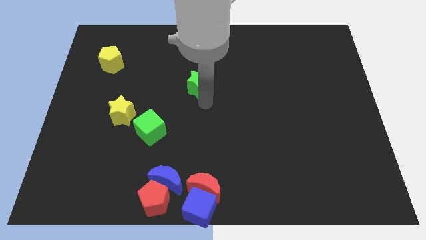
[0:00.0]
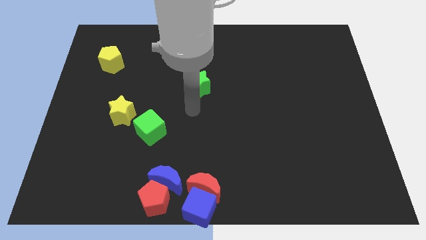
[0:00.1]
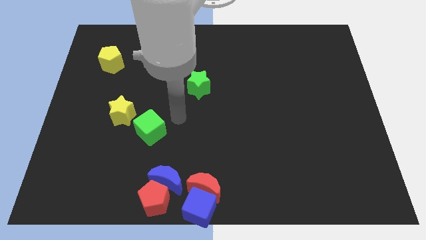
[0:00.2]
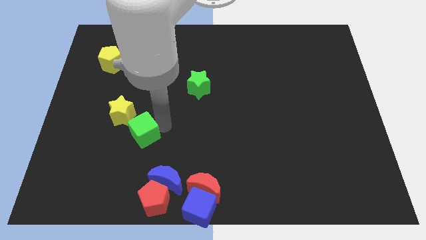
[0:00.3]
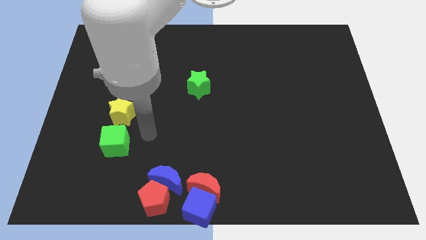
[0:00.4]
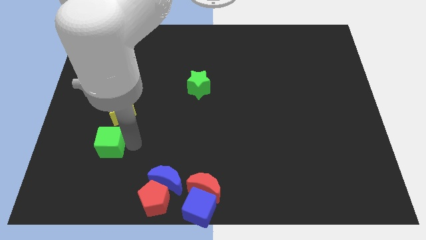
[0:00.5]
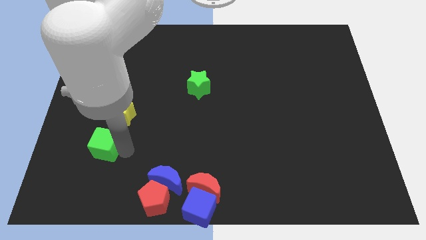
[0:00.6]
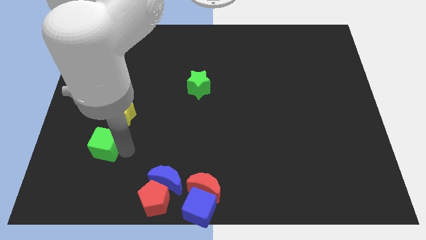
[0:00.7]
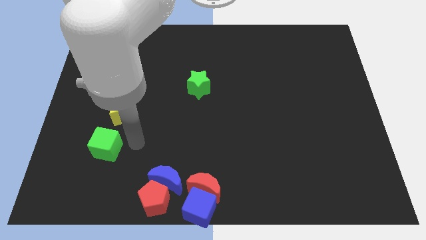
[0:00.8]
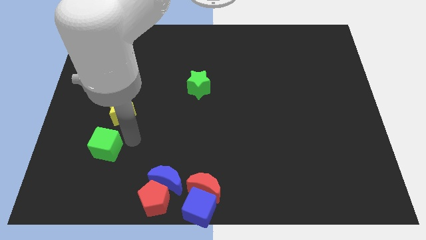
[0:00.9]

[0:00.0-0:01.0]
move the green cube below the yellow star

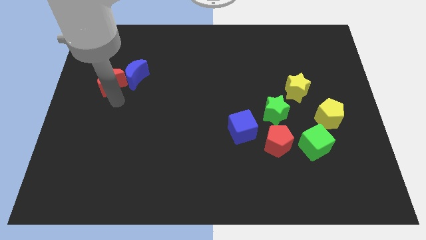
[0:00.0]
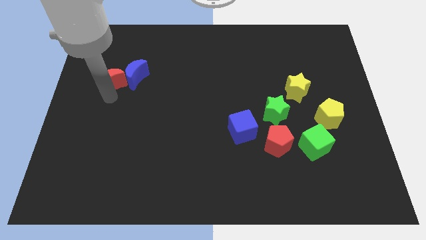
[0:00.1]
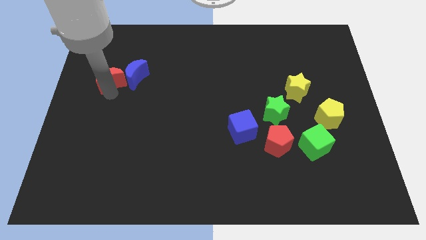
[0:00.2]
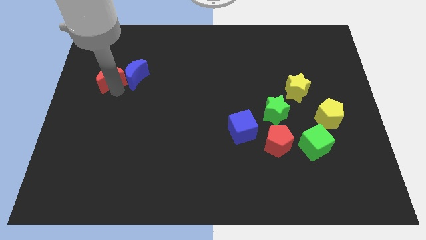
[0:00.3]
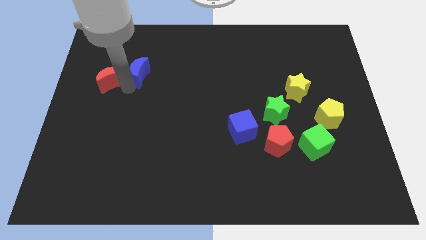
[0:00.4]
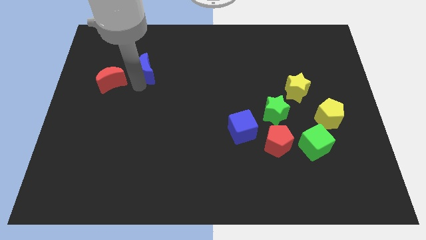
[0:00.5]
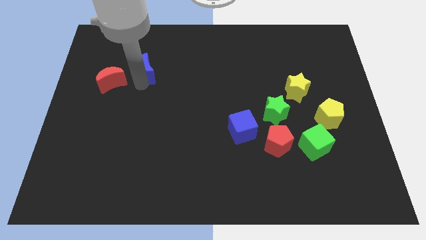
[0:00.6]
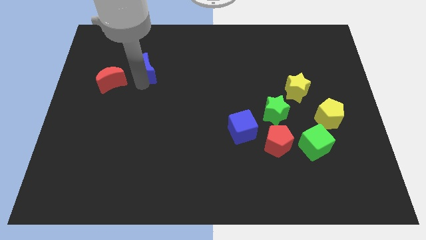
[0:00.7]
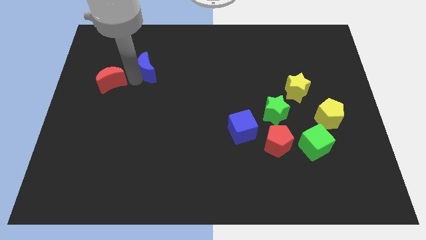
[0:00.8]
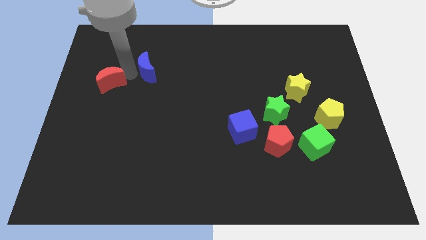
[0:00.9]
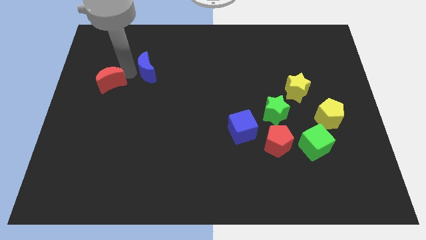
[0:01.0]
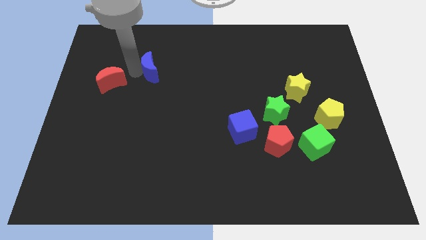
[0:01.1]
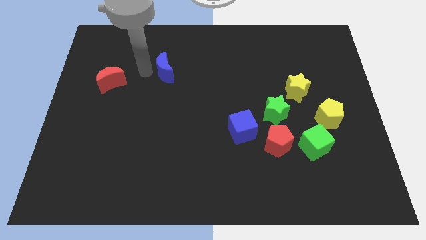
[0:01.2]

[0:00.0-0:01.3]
push blue crescent slightly towards right side

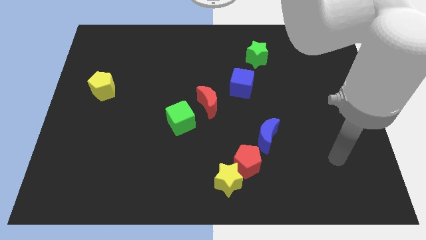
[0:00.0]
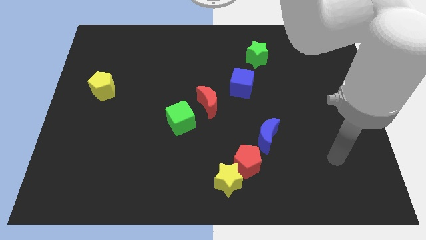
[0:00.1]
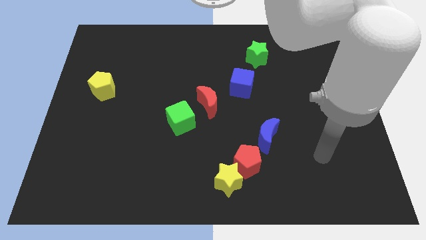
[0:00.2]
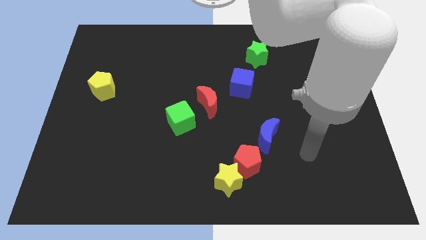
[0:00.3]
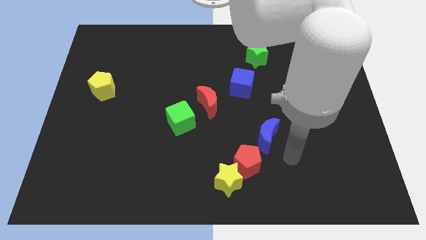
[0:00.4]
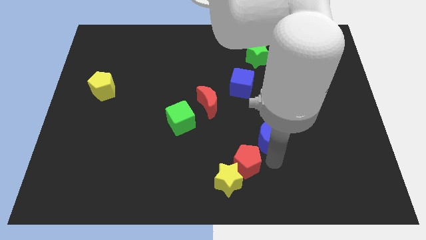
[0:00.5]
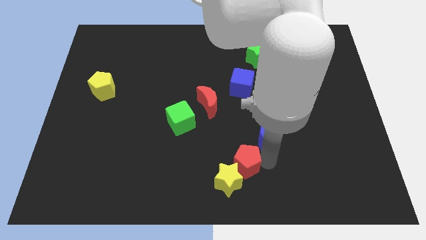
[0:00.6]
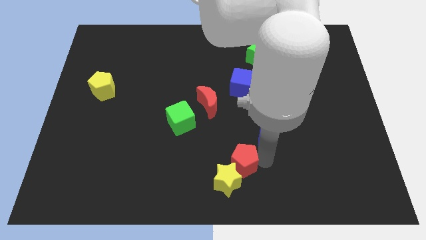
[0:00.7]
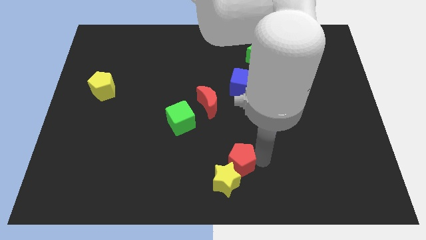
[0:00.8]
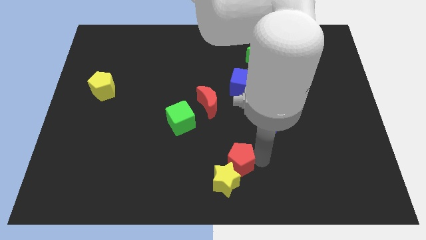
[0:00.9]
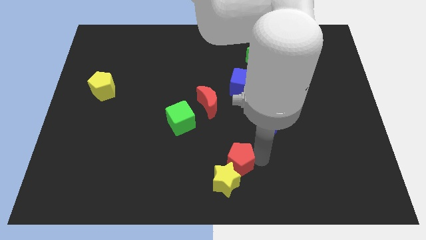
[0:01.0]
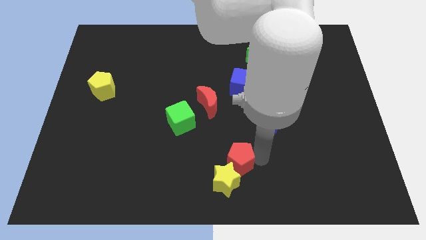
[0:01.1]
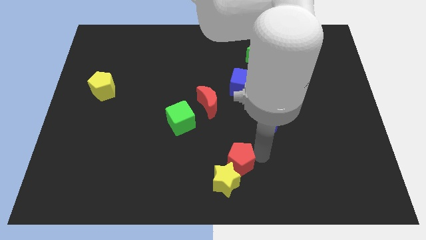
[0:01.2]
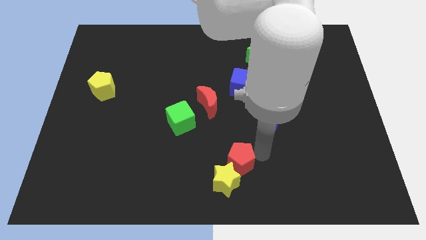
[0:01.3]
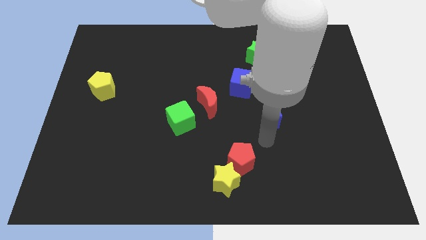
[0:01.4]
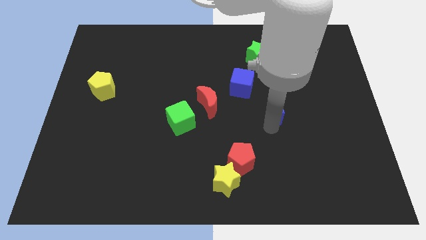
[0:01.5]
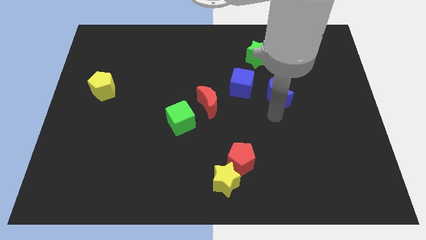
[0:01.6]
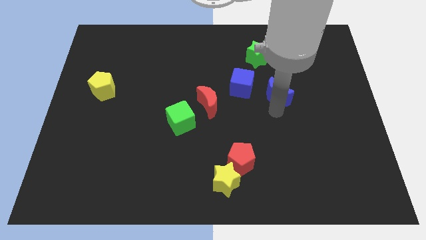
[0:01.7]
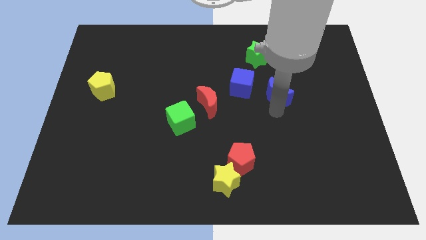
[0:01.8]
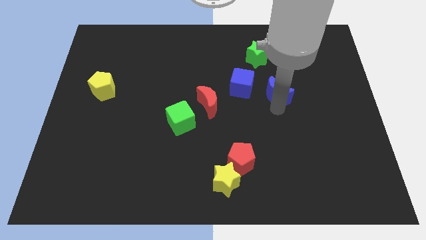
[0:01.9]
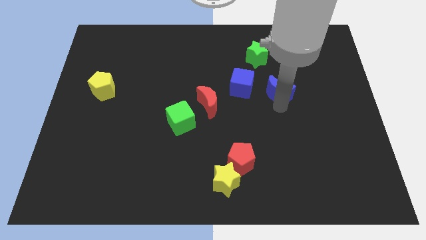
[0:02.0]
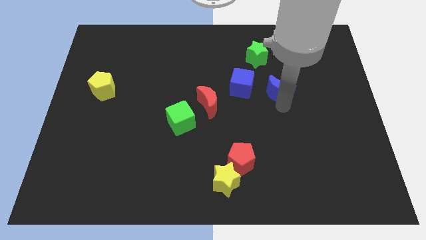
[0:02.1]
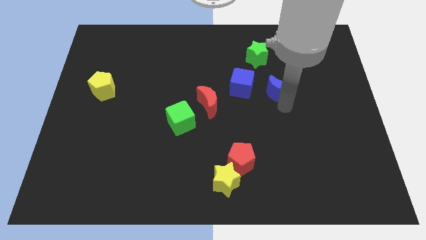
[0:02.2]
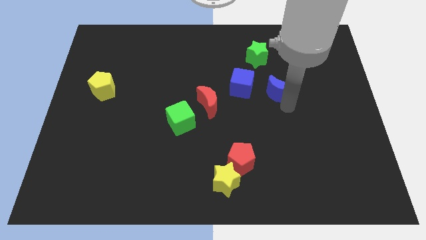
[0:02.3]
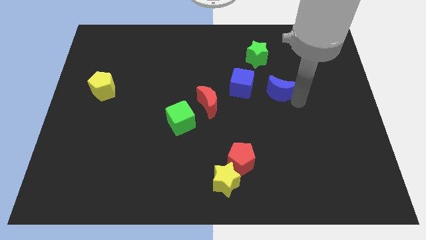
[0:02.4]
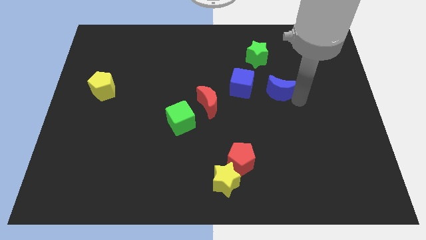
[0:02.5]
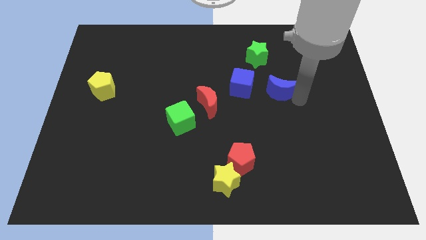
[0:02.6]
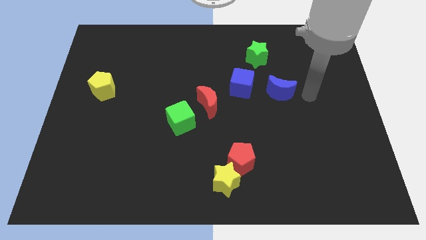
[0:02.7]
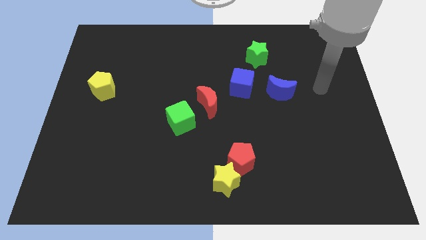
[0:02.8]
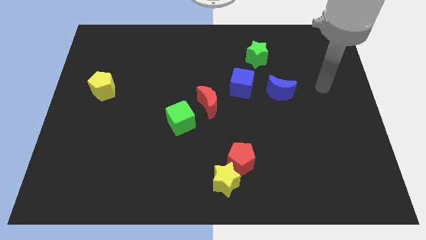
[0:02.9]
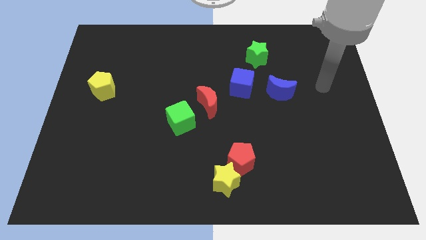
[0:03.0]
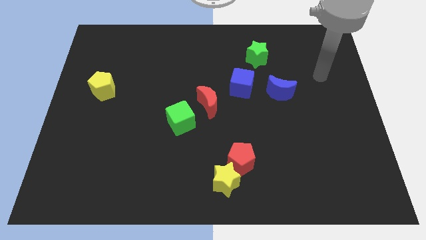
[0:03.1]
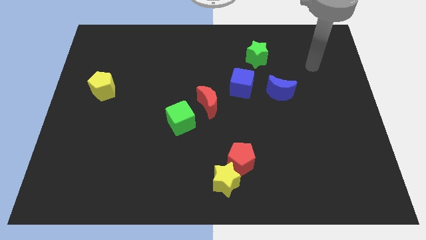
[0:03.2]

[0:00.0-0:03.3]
place the blue moon right to the blue cube

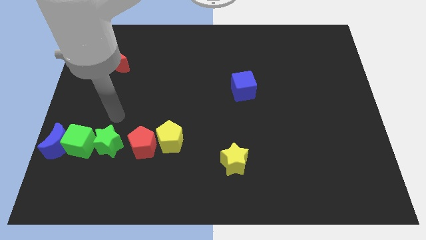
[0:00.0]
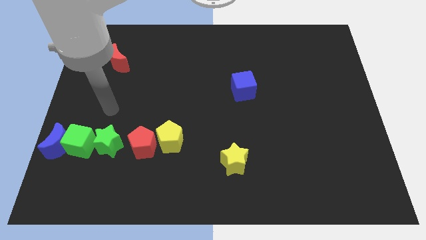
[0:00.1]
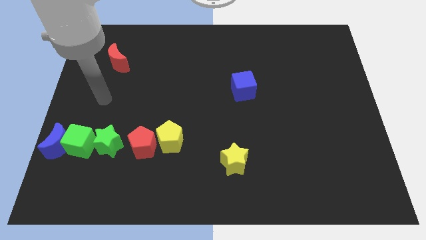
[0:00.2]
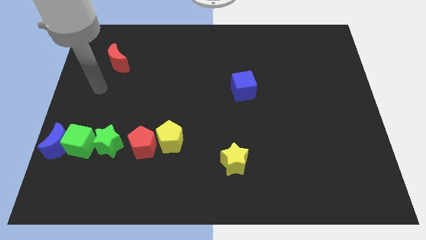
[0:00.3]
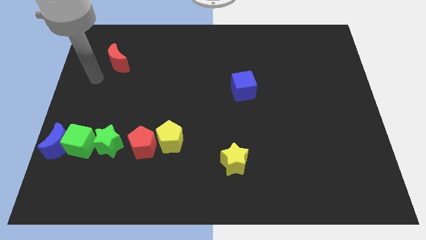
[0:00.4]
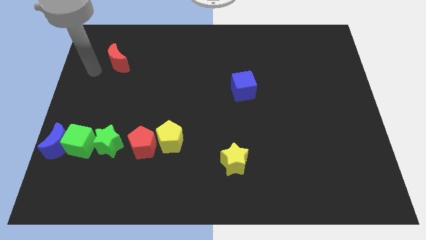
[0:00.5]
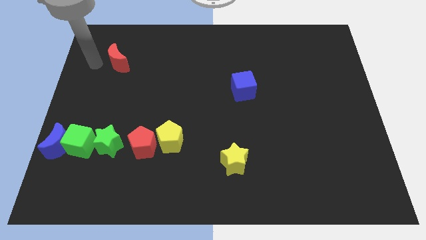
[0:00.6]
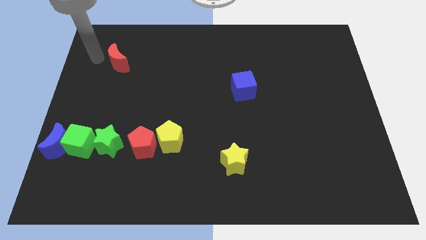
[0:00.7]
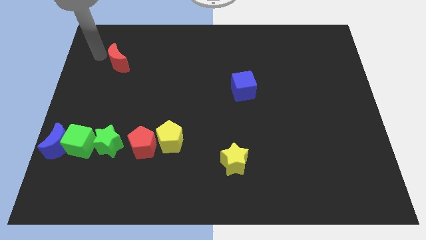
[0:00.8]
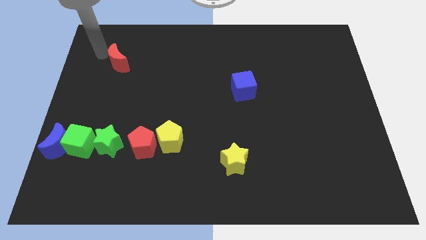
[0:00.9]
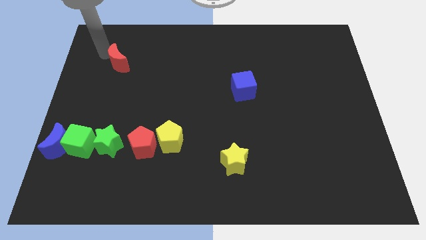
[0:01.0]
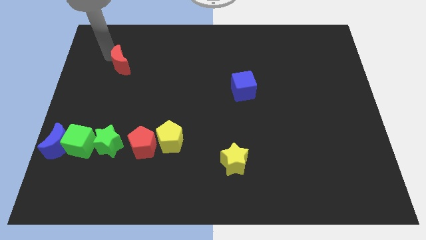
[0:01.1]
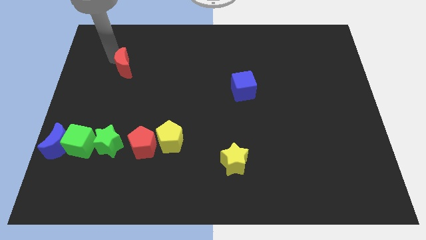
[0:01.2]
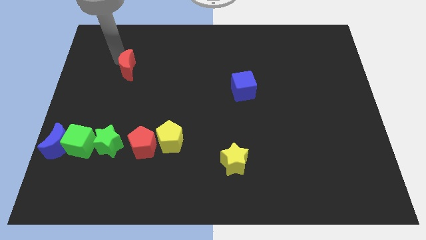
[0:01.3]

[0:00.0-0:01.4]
move your arm towards the red crescent

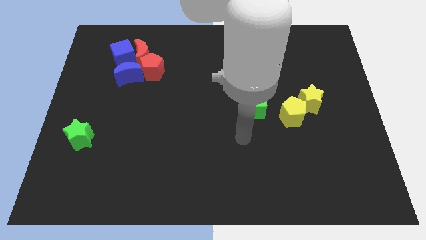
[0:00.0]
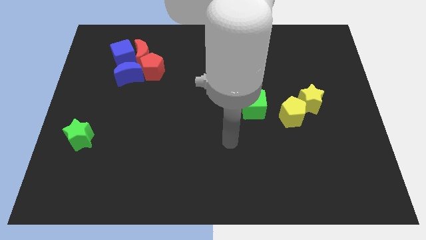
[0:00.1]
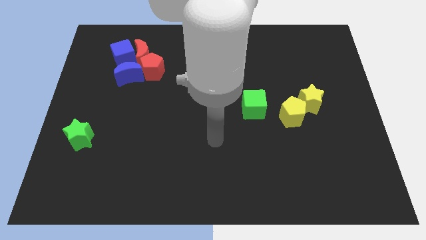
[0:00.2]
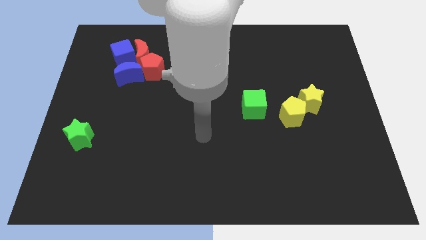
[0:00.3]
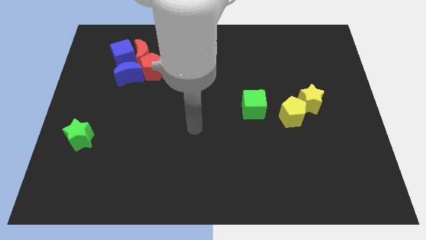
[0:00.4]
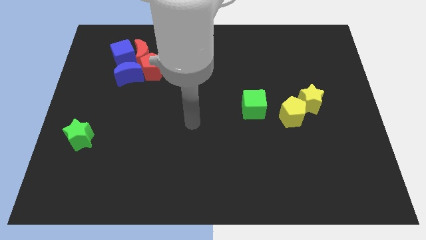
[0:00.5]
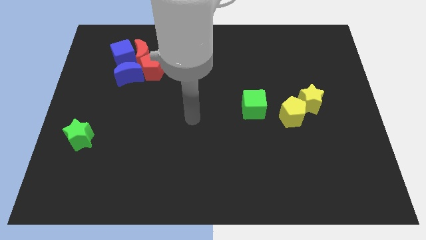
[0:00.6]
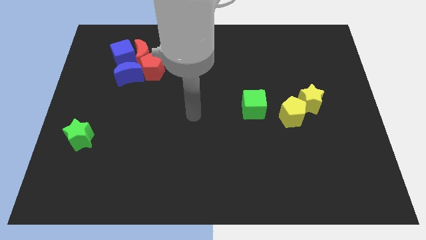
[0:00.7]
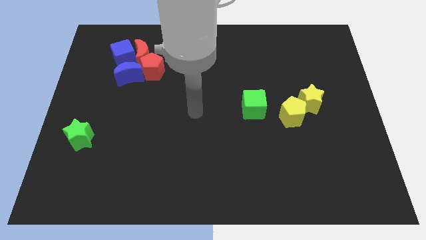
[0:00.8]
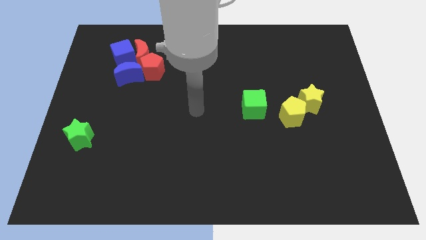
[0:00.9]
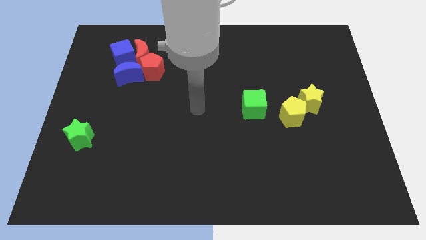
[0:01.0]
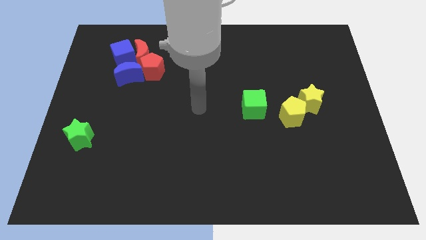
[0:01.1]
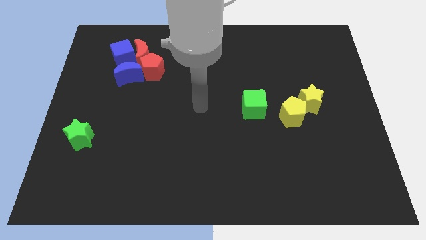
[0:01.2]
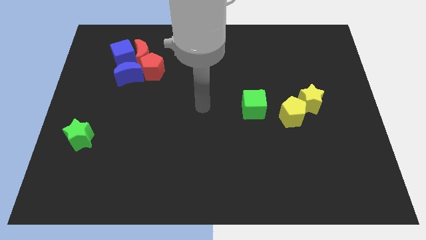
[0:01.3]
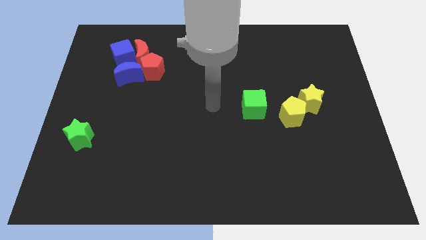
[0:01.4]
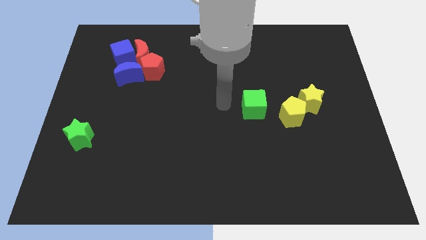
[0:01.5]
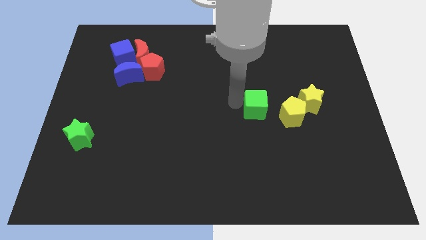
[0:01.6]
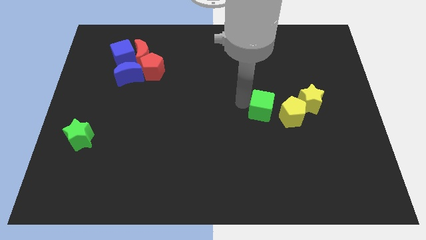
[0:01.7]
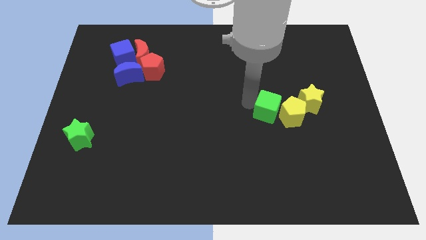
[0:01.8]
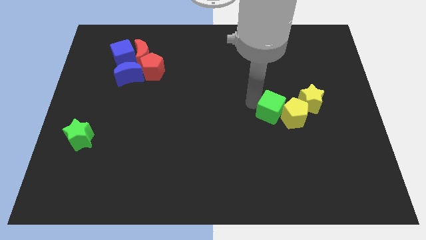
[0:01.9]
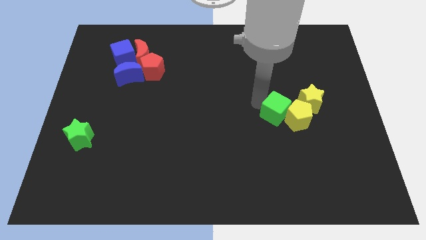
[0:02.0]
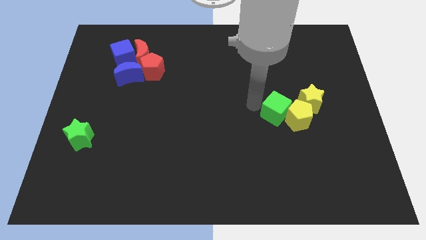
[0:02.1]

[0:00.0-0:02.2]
make a group of yellow star yellow pentagon and green cube
